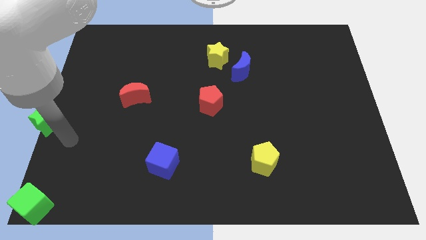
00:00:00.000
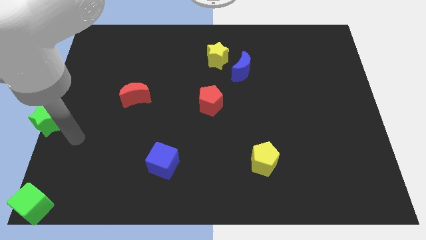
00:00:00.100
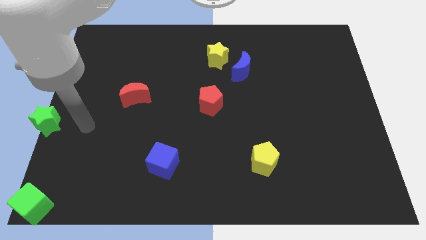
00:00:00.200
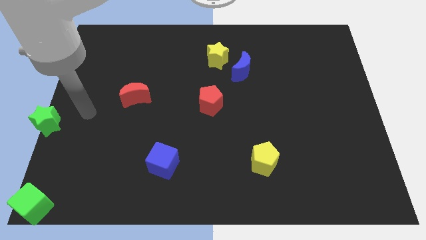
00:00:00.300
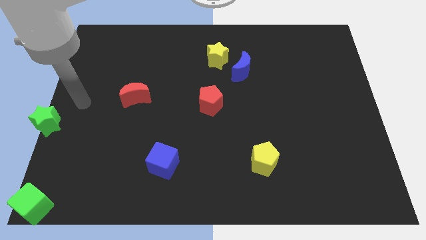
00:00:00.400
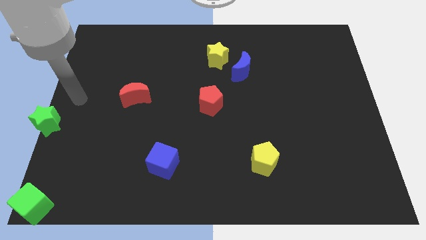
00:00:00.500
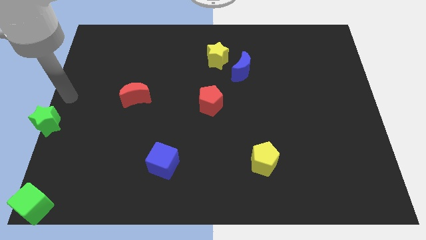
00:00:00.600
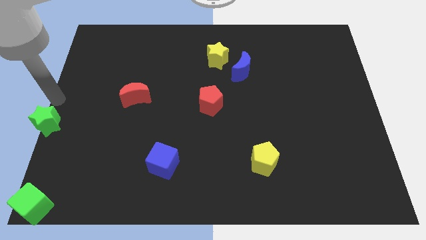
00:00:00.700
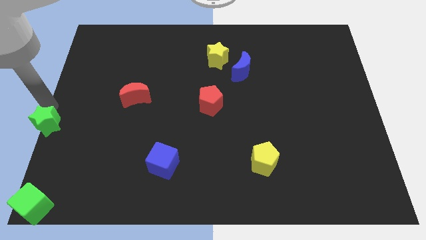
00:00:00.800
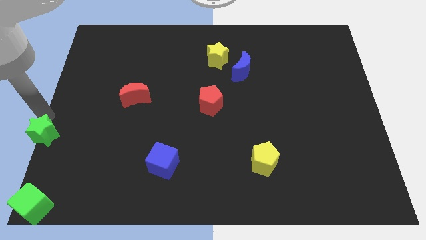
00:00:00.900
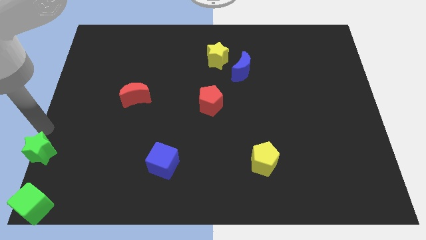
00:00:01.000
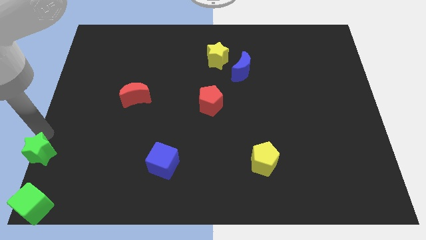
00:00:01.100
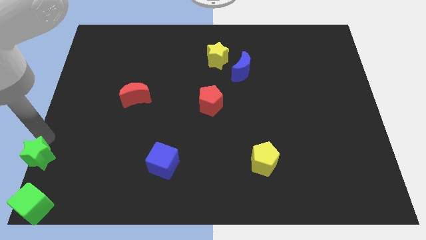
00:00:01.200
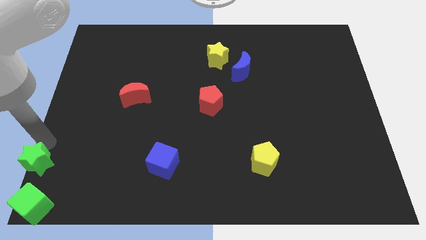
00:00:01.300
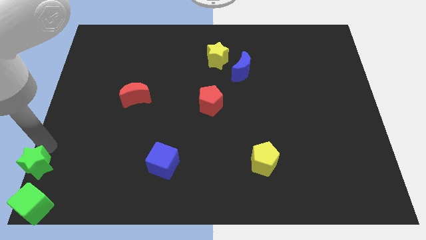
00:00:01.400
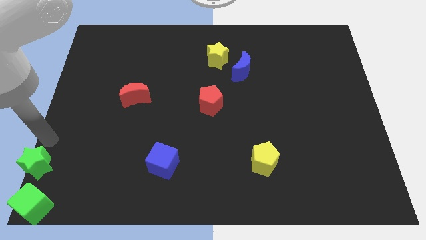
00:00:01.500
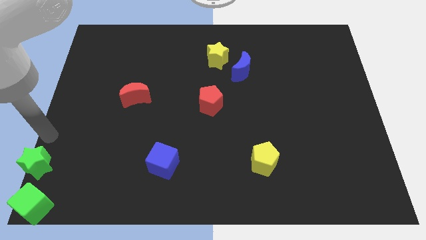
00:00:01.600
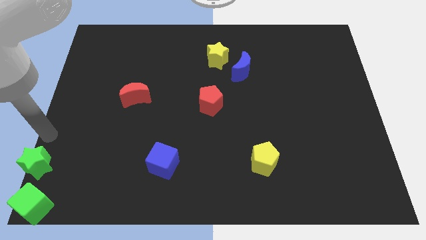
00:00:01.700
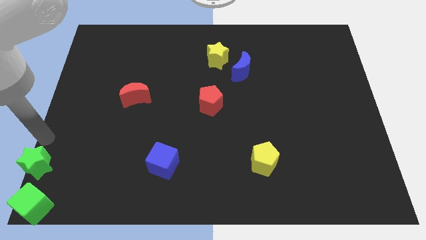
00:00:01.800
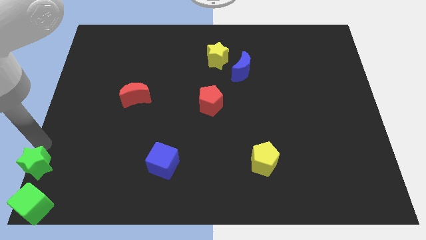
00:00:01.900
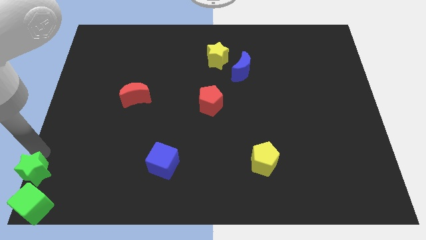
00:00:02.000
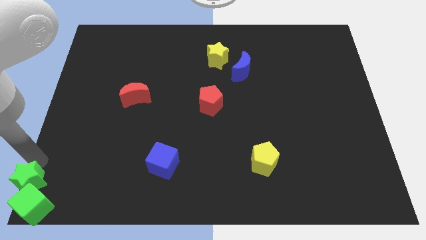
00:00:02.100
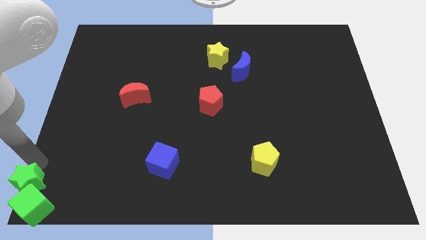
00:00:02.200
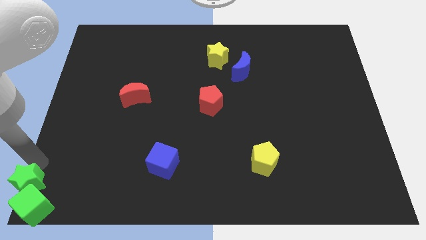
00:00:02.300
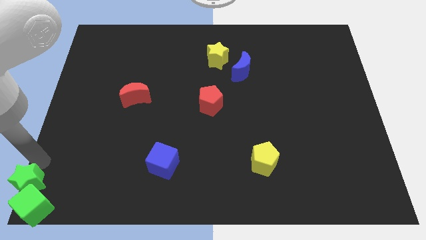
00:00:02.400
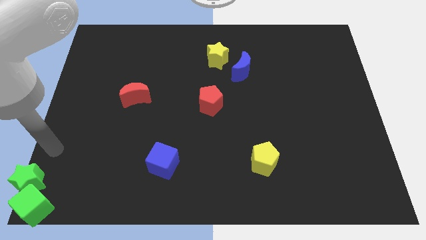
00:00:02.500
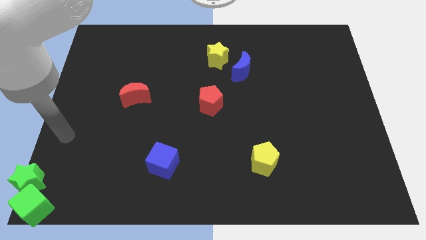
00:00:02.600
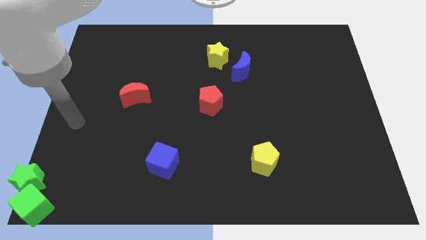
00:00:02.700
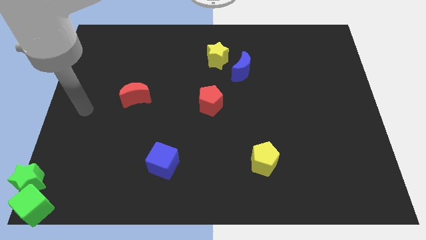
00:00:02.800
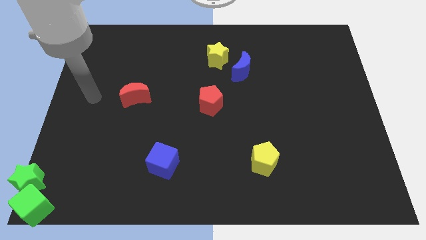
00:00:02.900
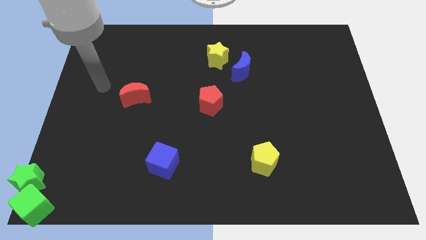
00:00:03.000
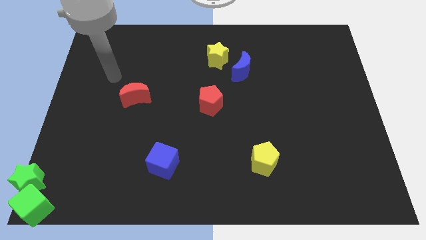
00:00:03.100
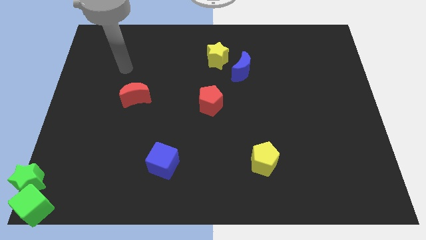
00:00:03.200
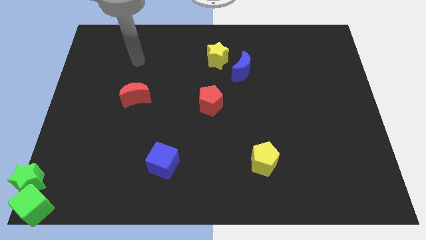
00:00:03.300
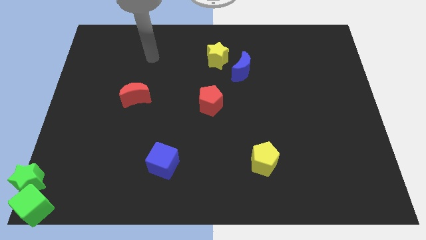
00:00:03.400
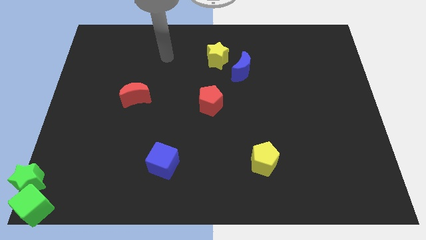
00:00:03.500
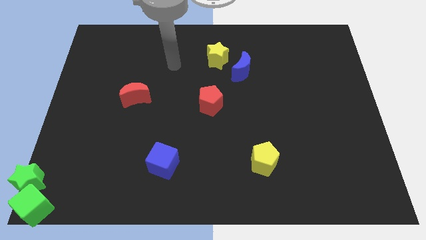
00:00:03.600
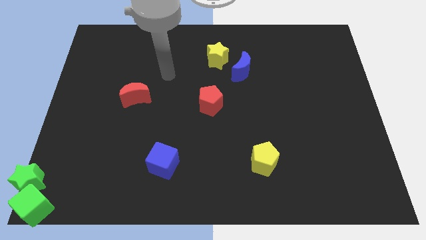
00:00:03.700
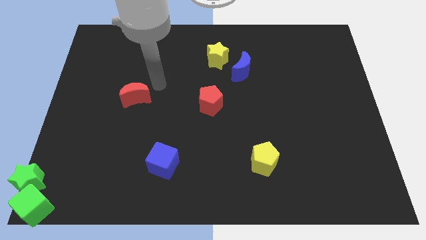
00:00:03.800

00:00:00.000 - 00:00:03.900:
push the green star into the green cube

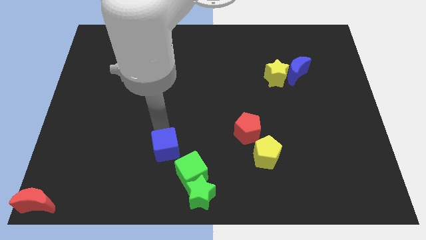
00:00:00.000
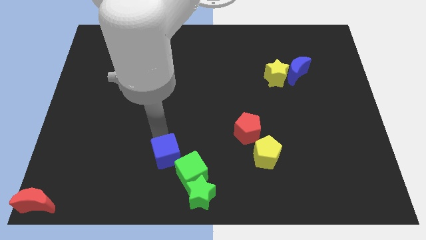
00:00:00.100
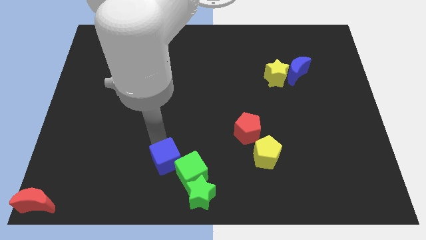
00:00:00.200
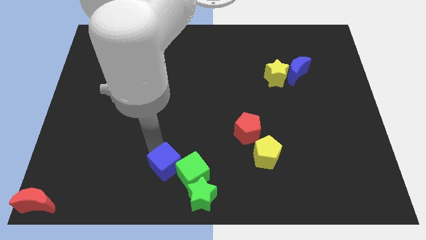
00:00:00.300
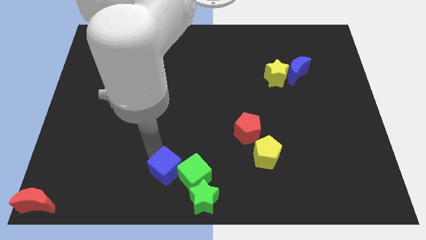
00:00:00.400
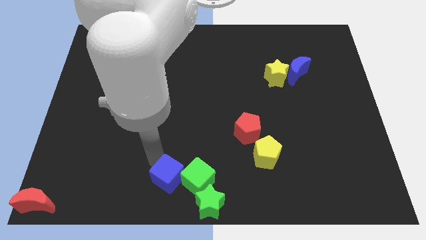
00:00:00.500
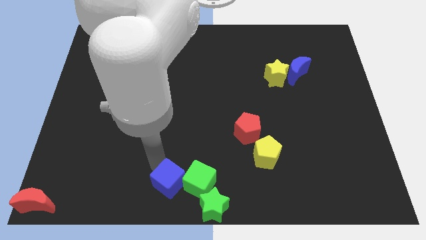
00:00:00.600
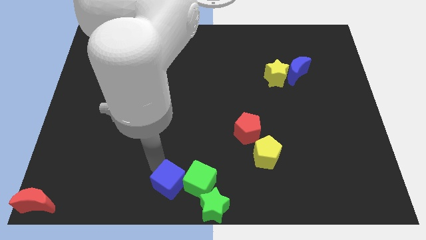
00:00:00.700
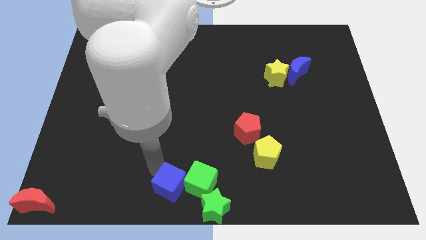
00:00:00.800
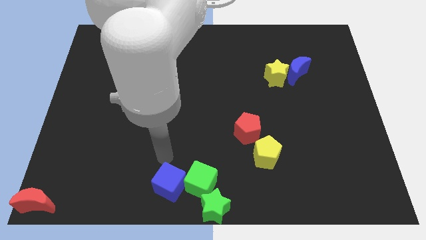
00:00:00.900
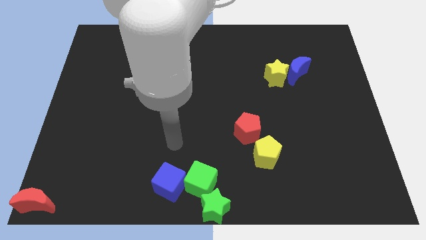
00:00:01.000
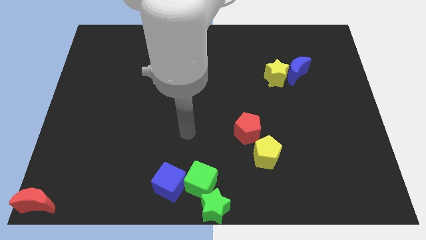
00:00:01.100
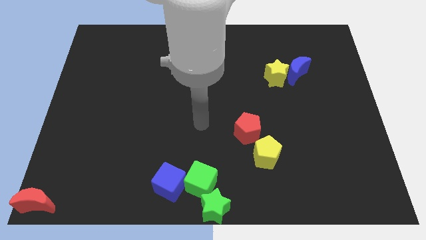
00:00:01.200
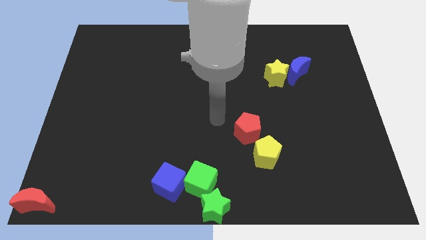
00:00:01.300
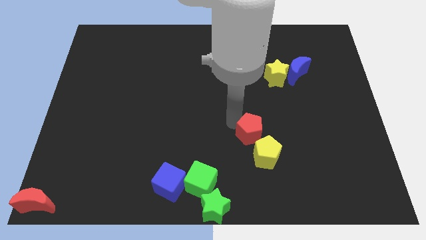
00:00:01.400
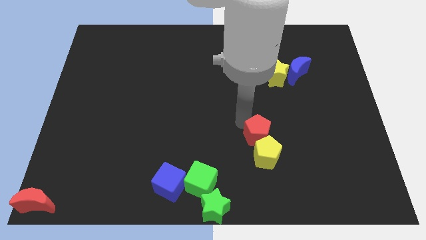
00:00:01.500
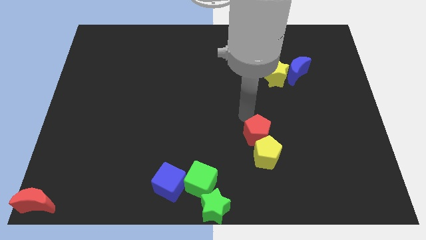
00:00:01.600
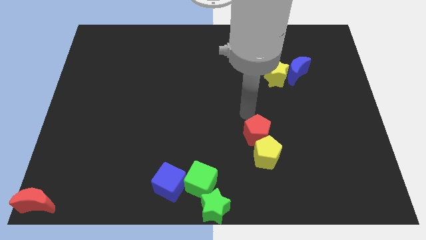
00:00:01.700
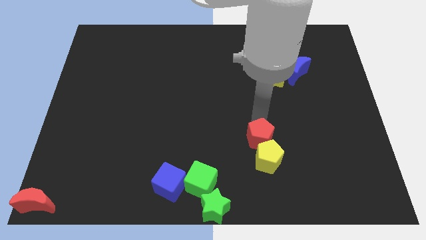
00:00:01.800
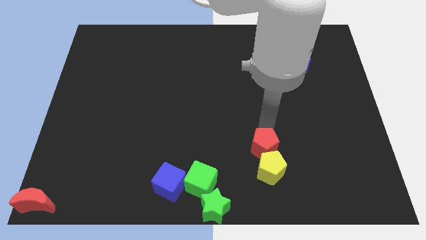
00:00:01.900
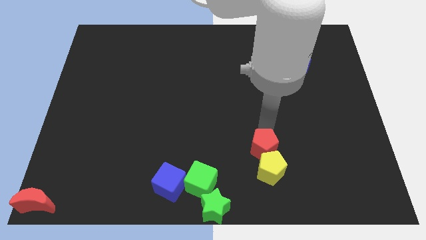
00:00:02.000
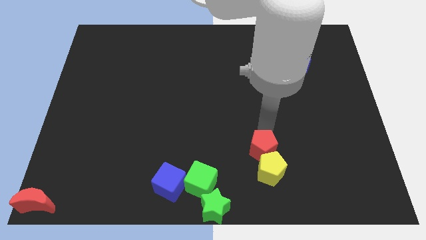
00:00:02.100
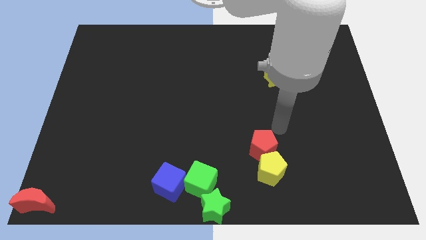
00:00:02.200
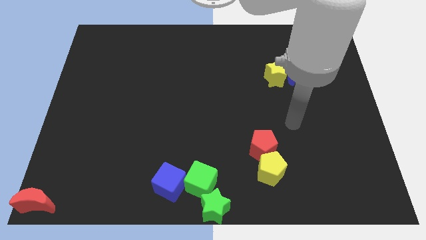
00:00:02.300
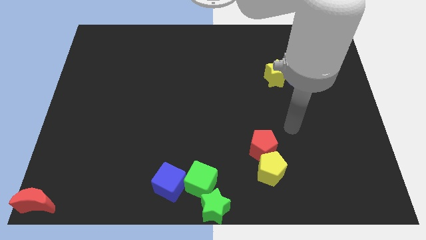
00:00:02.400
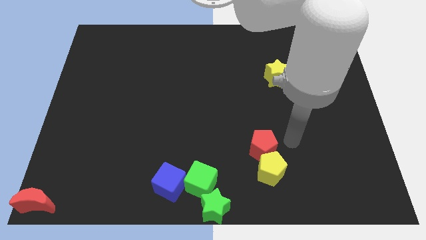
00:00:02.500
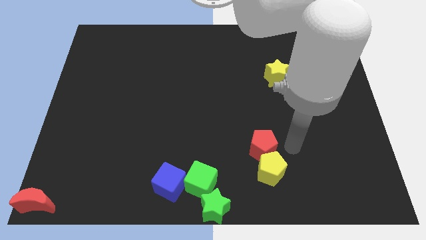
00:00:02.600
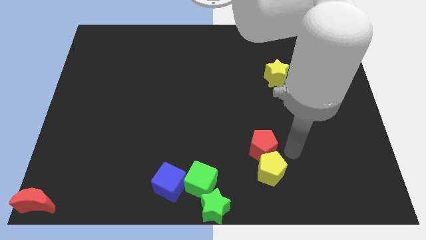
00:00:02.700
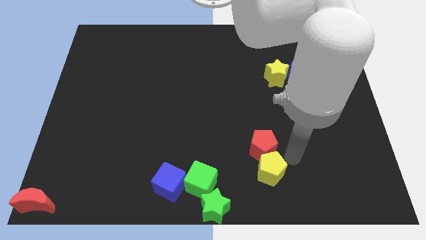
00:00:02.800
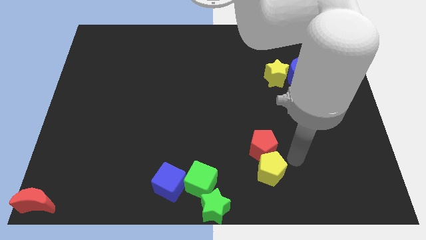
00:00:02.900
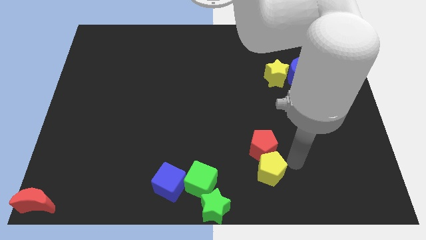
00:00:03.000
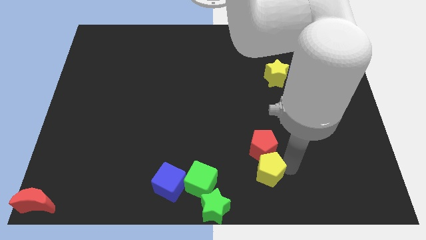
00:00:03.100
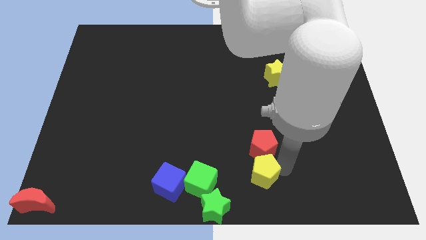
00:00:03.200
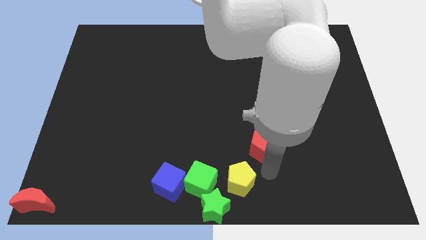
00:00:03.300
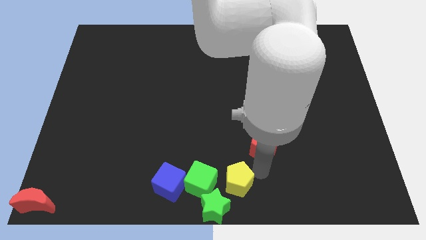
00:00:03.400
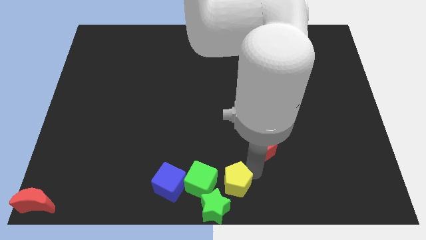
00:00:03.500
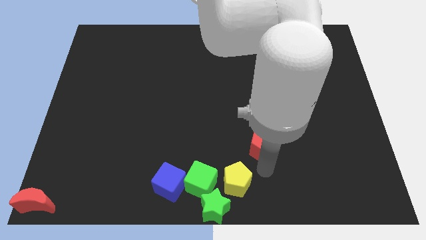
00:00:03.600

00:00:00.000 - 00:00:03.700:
push the blue cube yellow pentagon into the group of blocks

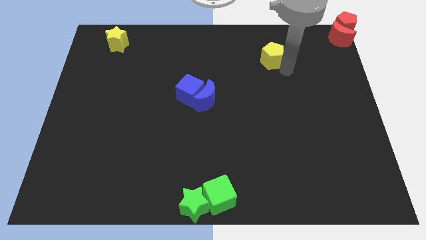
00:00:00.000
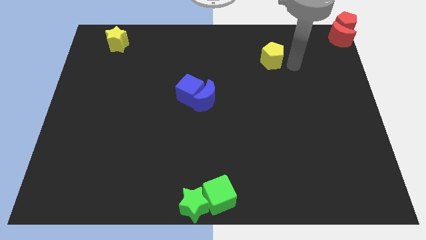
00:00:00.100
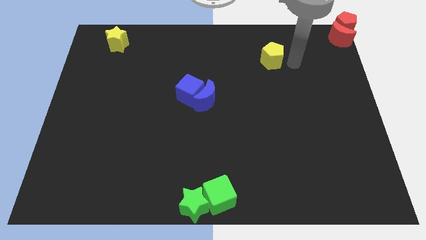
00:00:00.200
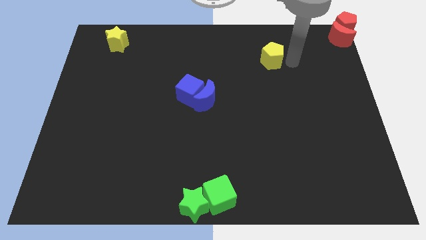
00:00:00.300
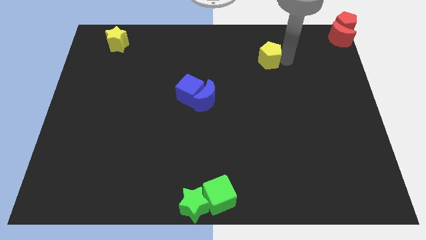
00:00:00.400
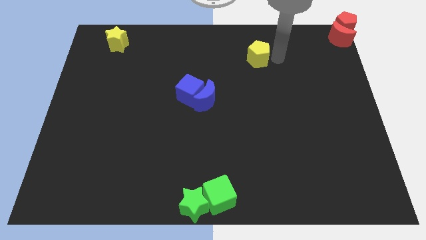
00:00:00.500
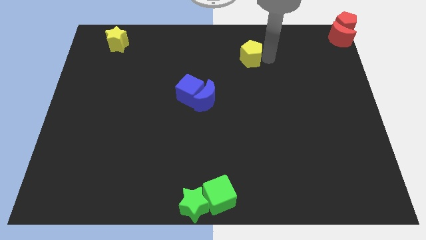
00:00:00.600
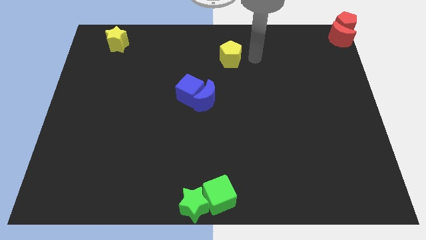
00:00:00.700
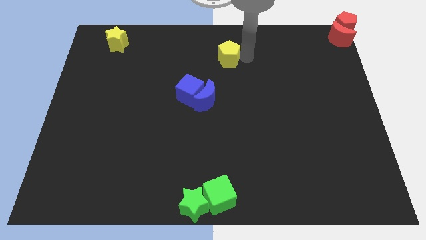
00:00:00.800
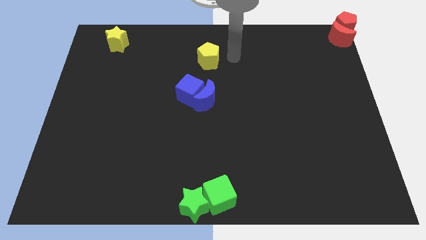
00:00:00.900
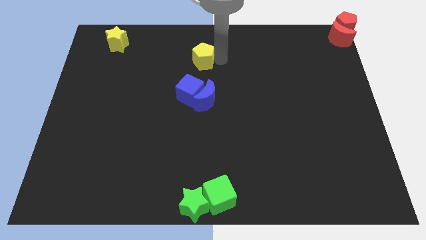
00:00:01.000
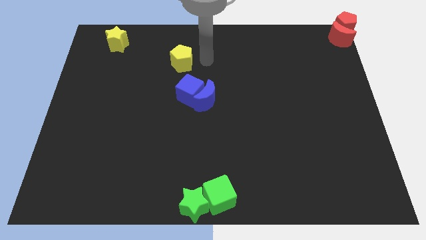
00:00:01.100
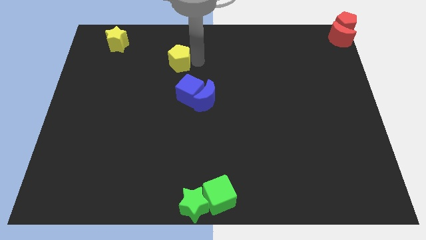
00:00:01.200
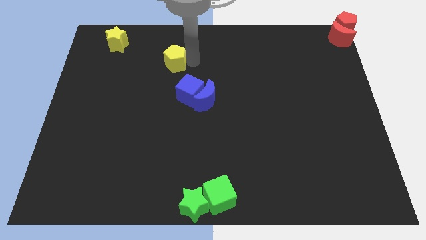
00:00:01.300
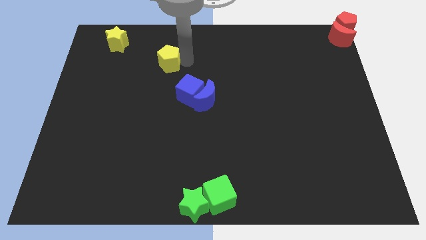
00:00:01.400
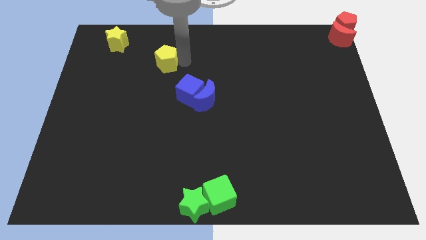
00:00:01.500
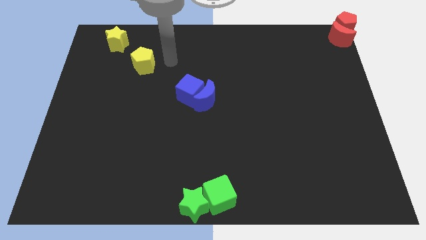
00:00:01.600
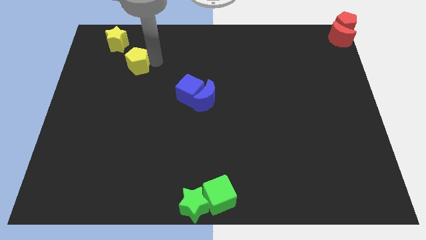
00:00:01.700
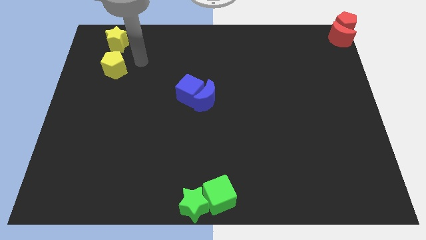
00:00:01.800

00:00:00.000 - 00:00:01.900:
move the yellow pentagon towards the yellow star
